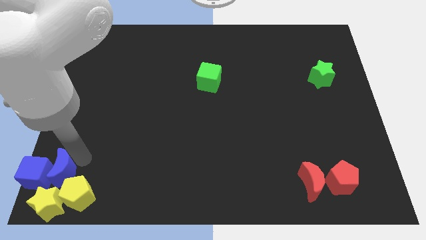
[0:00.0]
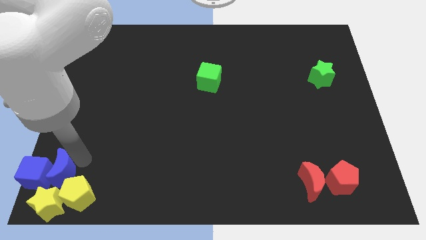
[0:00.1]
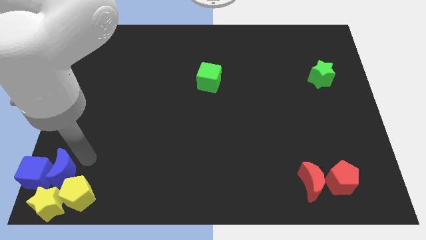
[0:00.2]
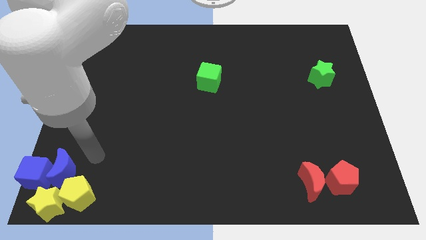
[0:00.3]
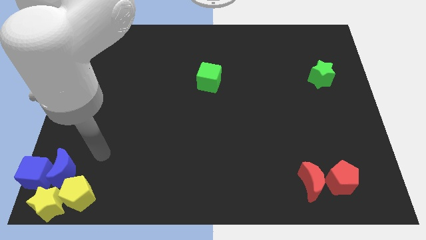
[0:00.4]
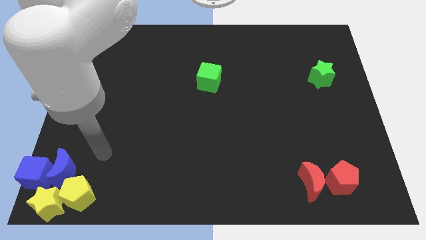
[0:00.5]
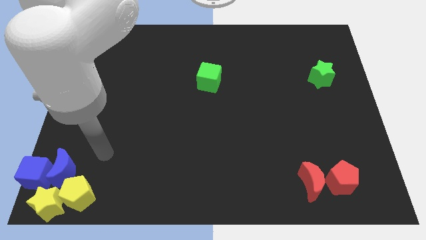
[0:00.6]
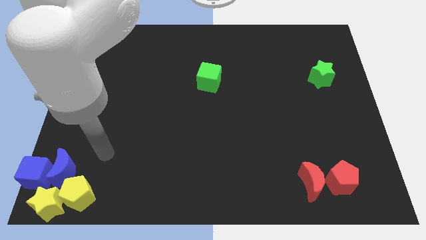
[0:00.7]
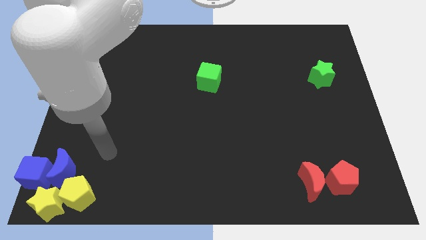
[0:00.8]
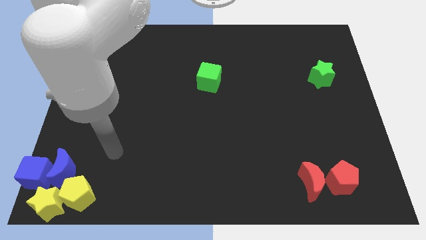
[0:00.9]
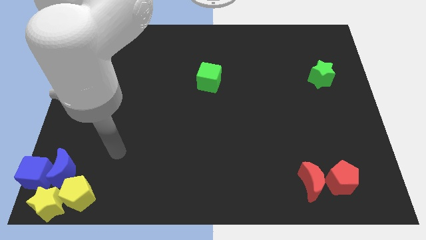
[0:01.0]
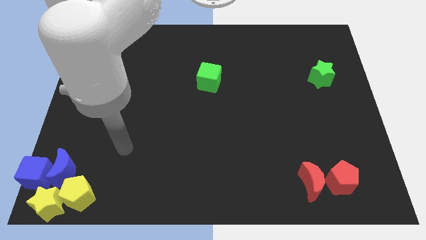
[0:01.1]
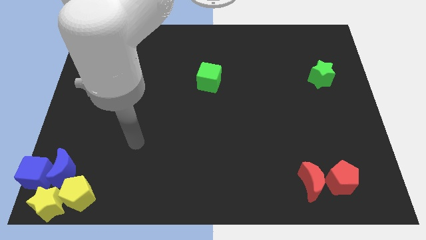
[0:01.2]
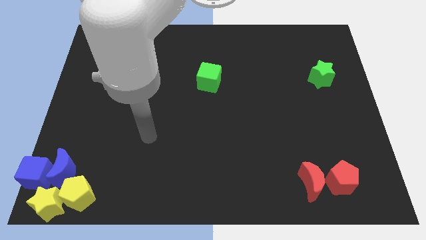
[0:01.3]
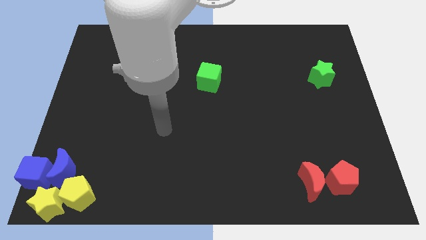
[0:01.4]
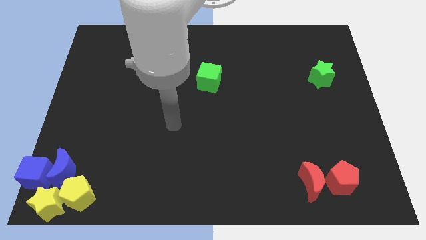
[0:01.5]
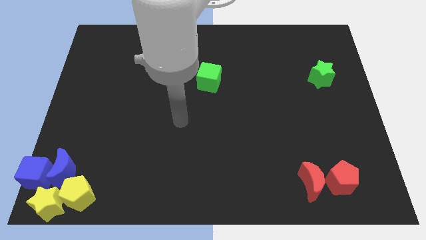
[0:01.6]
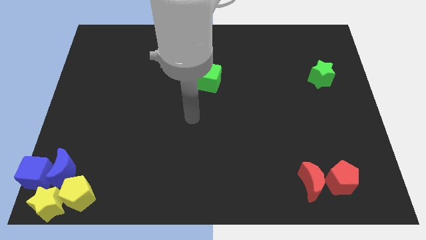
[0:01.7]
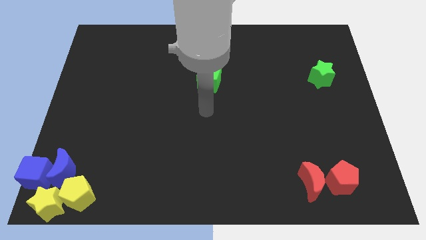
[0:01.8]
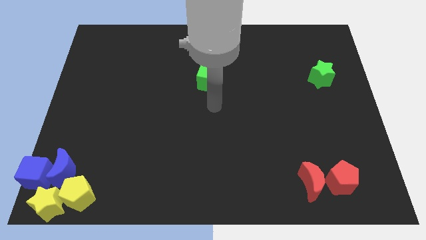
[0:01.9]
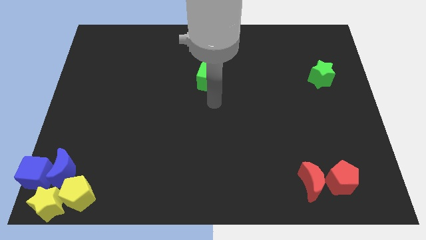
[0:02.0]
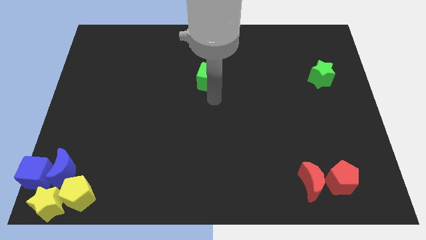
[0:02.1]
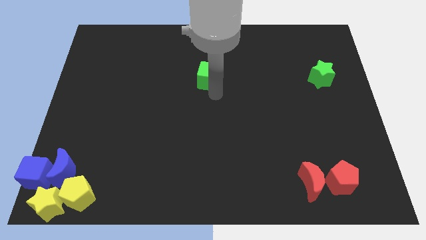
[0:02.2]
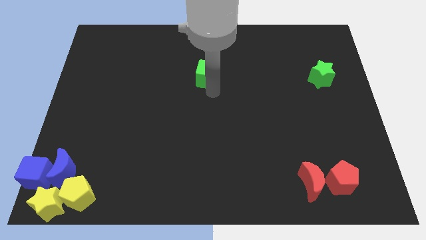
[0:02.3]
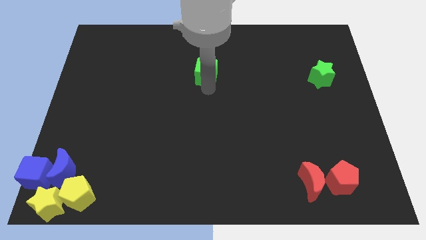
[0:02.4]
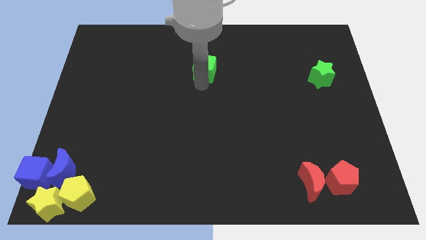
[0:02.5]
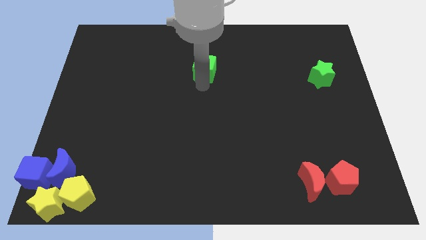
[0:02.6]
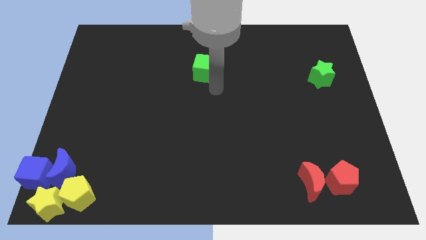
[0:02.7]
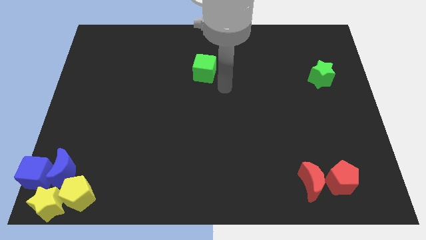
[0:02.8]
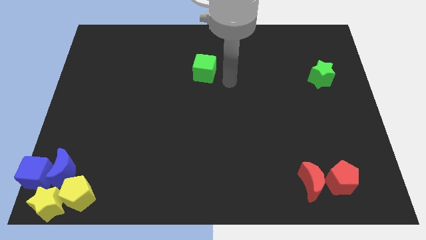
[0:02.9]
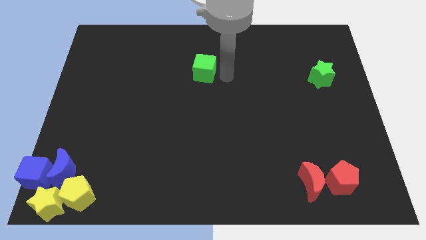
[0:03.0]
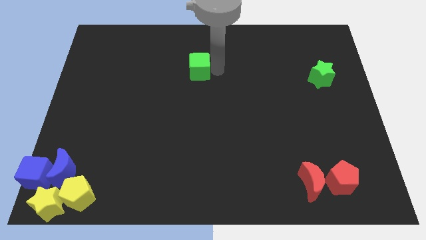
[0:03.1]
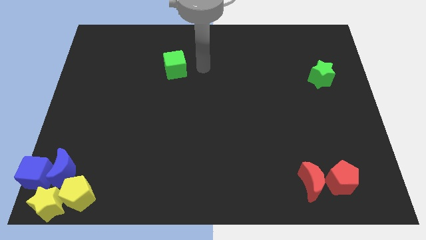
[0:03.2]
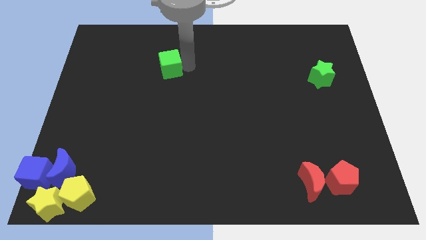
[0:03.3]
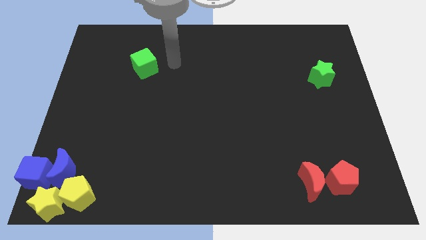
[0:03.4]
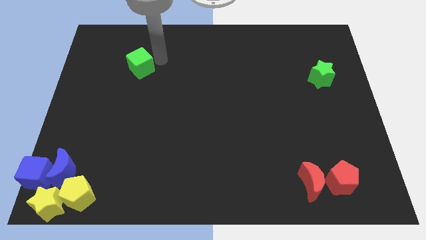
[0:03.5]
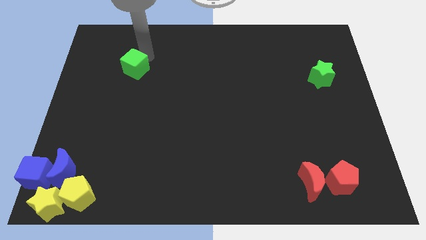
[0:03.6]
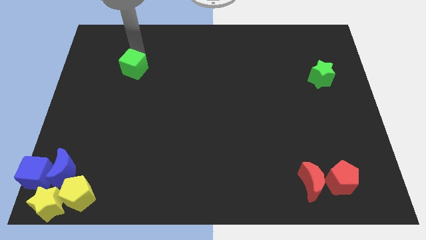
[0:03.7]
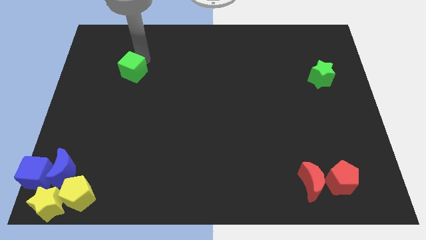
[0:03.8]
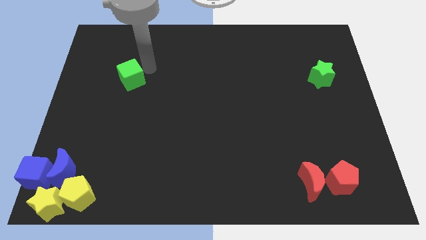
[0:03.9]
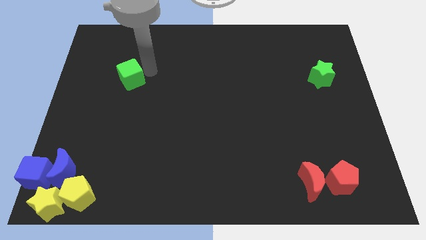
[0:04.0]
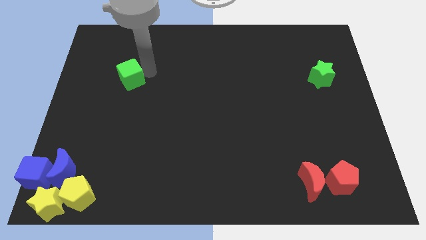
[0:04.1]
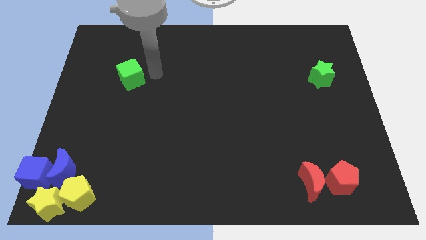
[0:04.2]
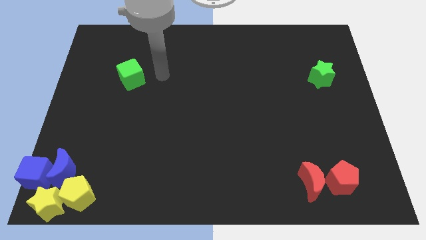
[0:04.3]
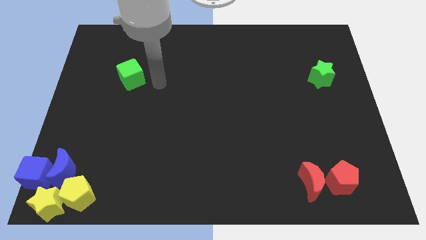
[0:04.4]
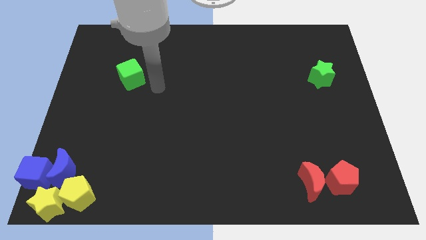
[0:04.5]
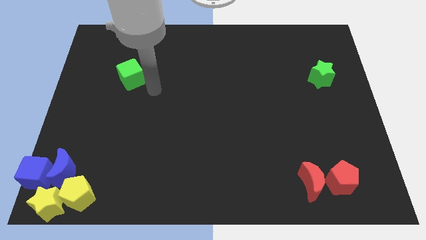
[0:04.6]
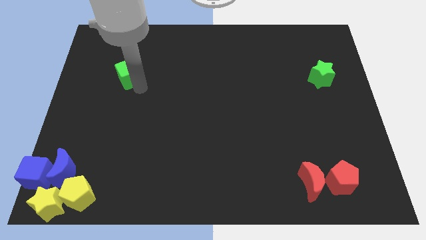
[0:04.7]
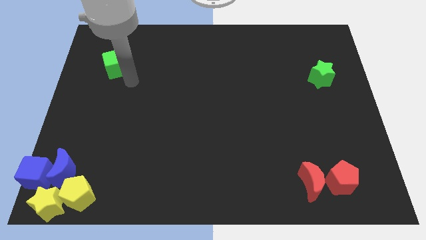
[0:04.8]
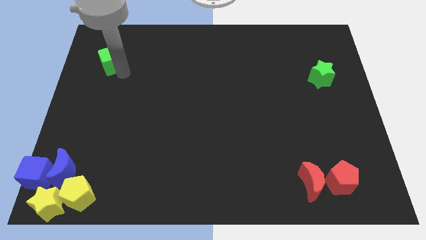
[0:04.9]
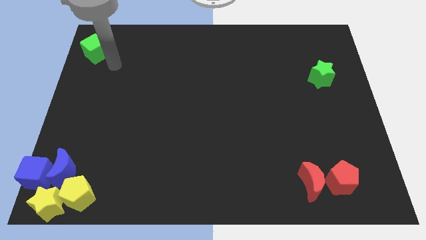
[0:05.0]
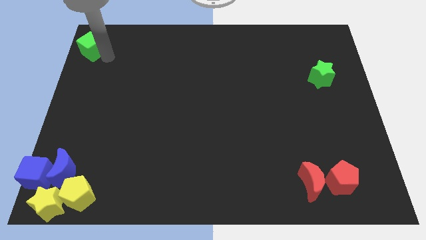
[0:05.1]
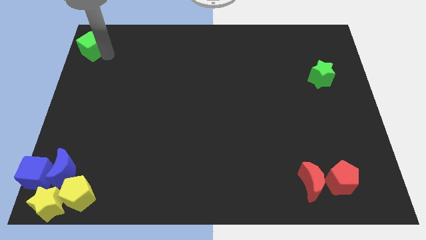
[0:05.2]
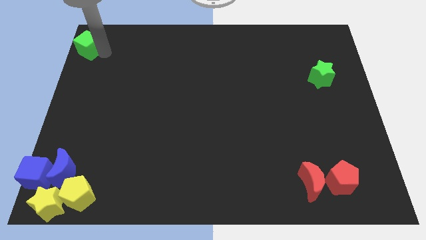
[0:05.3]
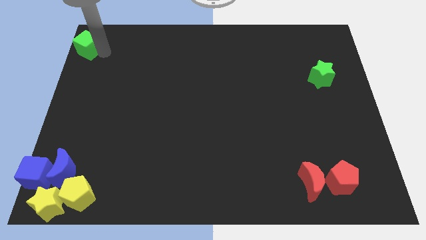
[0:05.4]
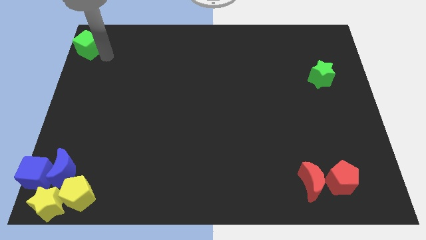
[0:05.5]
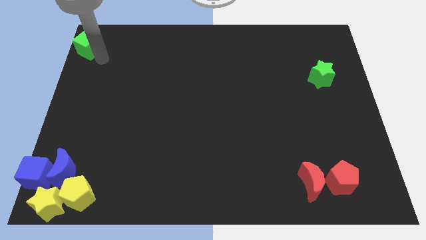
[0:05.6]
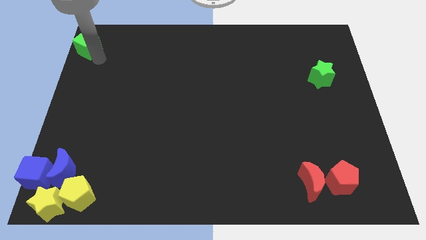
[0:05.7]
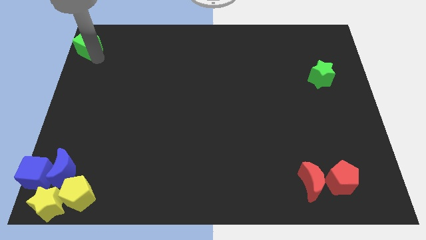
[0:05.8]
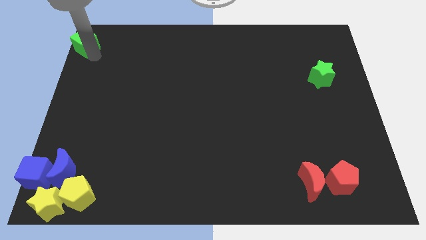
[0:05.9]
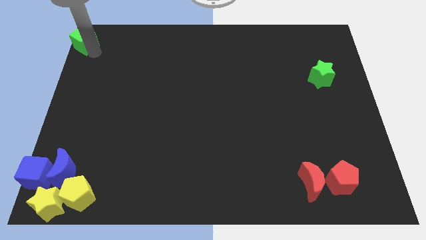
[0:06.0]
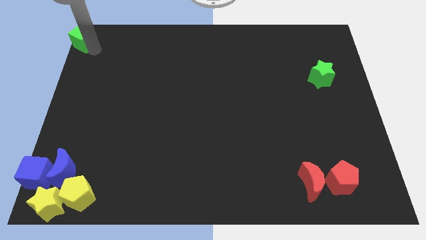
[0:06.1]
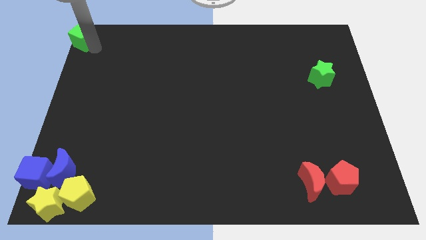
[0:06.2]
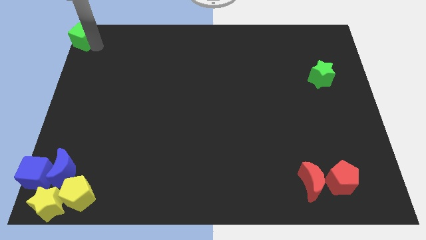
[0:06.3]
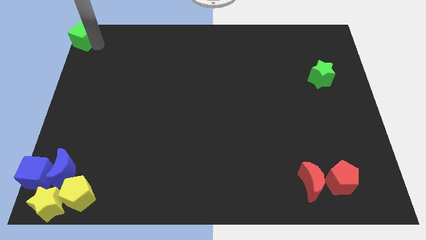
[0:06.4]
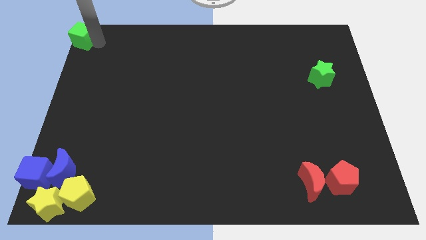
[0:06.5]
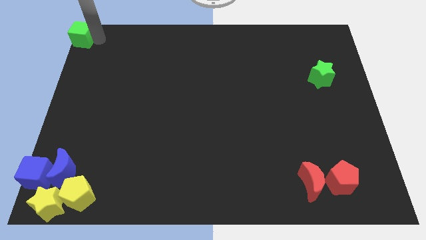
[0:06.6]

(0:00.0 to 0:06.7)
push the green cube to the top left of the table

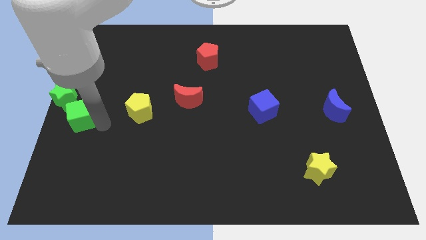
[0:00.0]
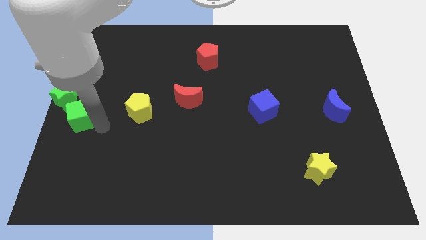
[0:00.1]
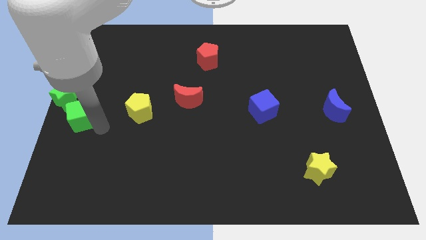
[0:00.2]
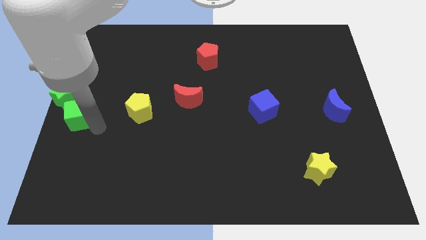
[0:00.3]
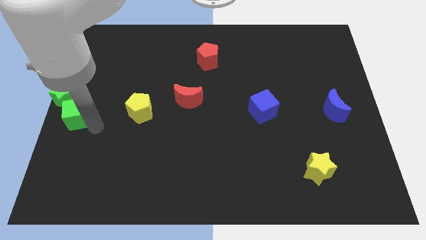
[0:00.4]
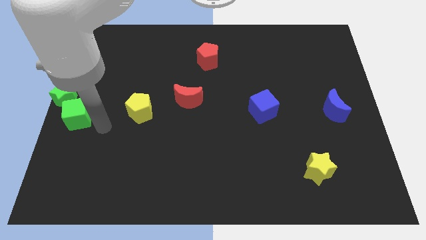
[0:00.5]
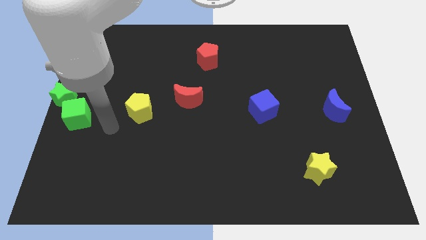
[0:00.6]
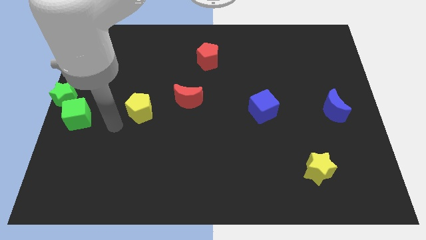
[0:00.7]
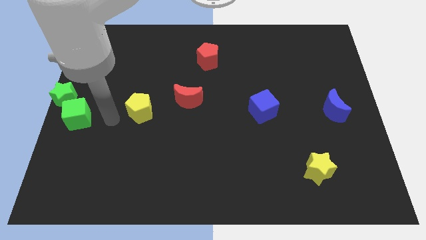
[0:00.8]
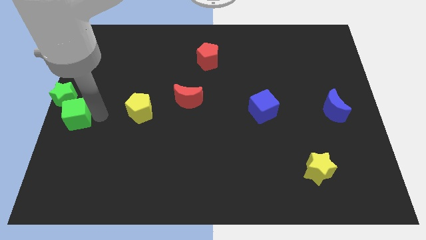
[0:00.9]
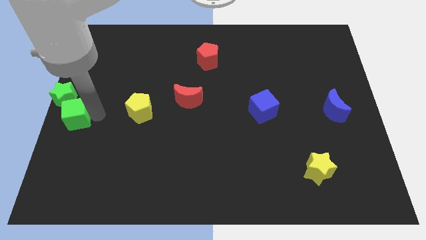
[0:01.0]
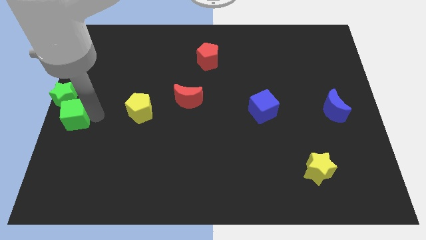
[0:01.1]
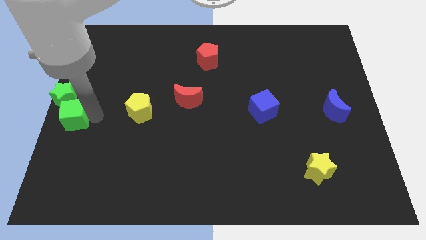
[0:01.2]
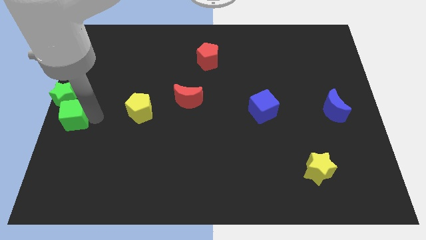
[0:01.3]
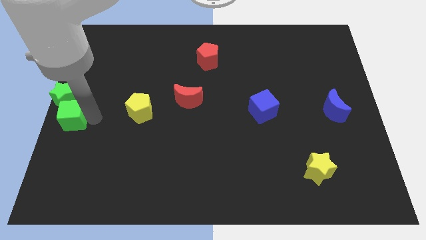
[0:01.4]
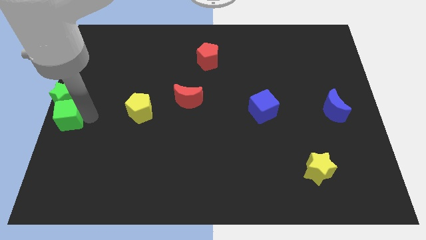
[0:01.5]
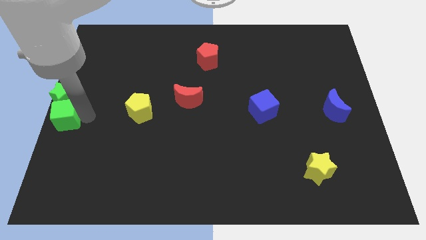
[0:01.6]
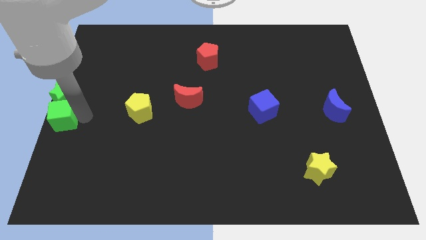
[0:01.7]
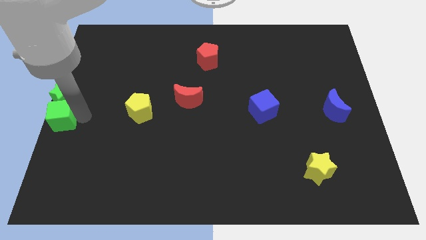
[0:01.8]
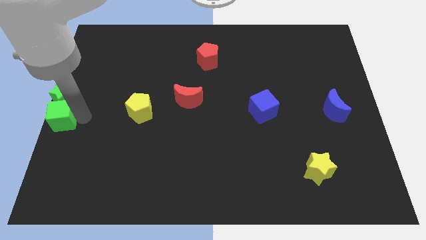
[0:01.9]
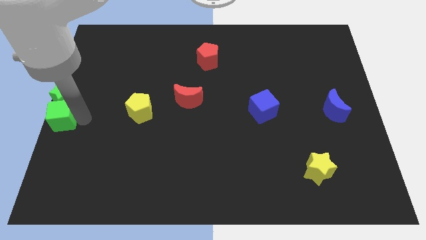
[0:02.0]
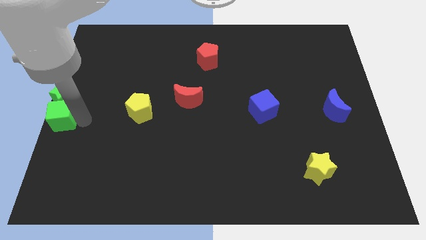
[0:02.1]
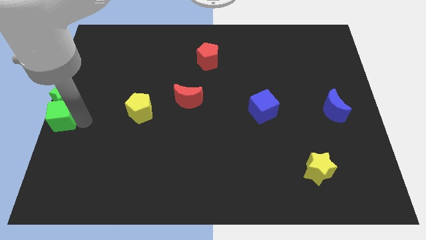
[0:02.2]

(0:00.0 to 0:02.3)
place the green cube down to the green star

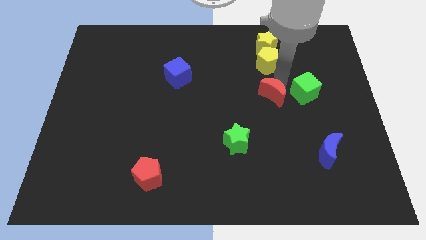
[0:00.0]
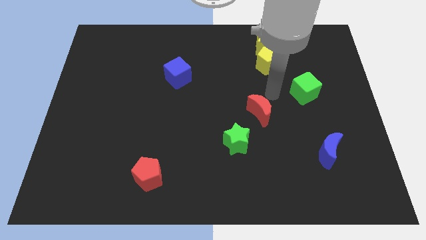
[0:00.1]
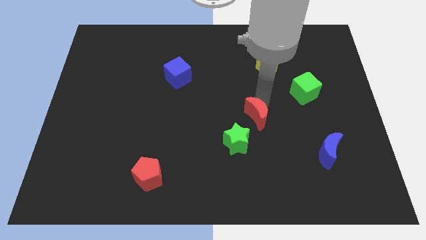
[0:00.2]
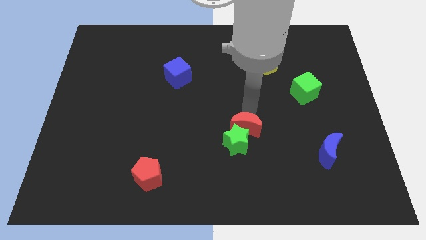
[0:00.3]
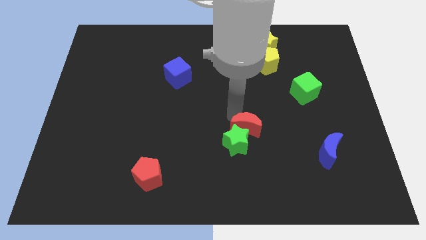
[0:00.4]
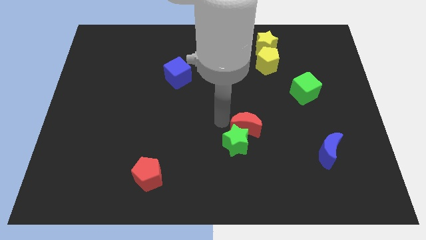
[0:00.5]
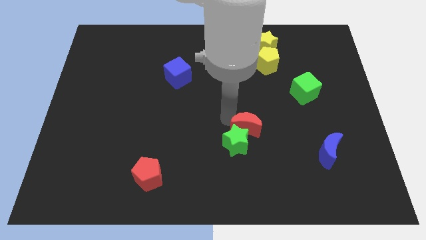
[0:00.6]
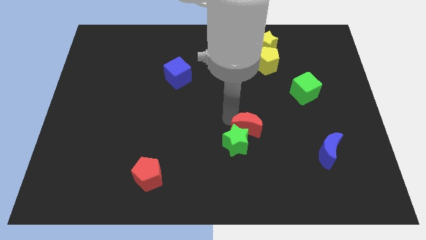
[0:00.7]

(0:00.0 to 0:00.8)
push red moon towards green star
